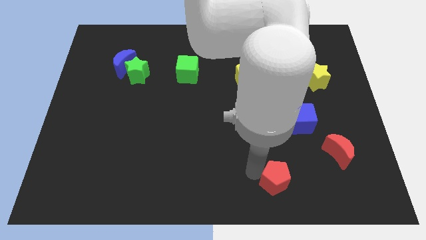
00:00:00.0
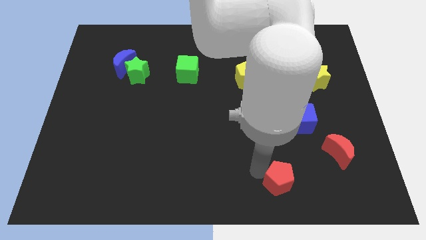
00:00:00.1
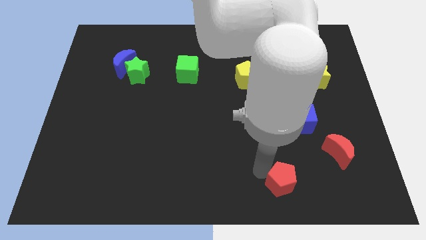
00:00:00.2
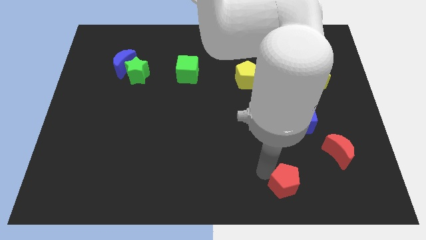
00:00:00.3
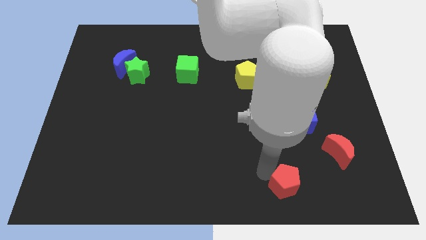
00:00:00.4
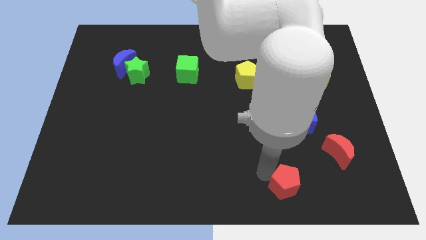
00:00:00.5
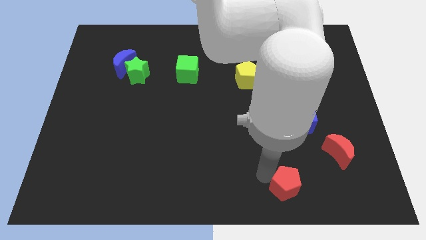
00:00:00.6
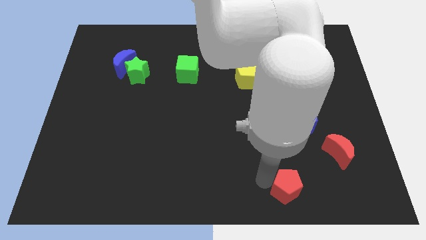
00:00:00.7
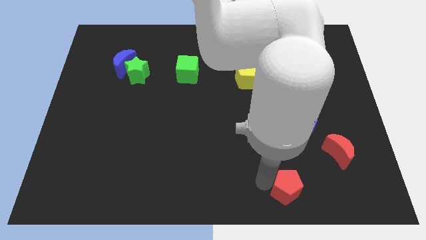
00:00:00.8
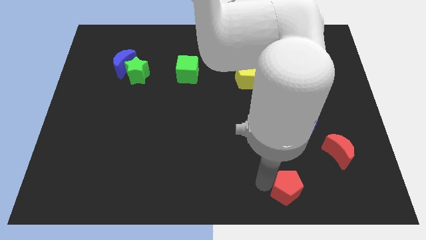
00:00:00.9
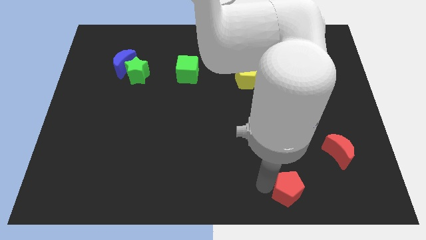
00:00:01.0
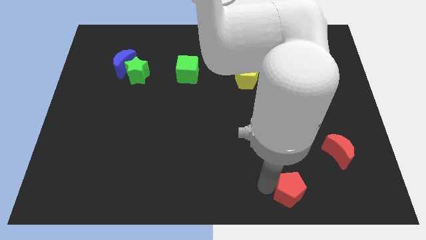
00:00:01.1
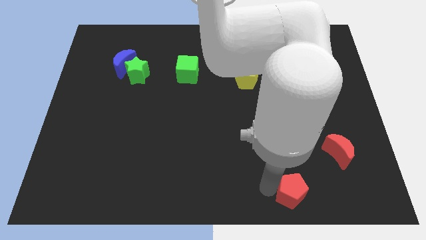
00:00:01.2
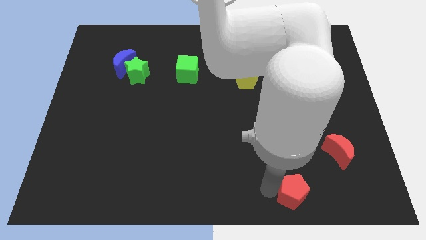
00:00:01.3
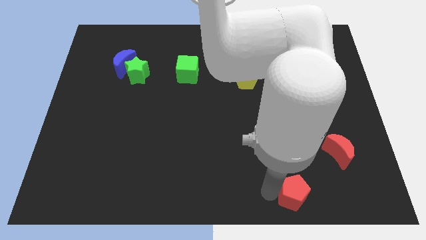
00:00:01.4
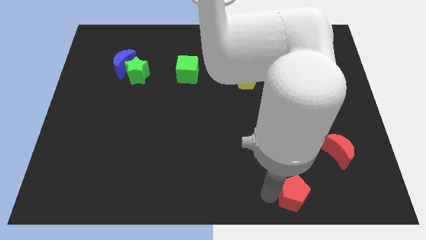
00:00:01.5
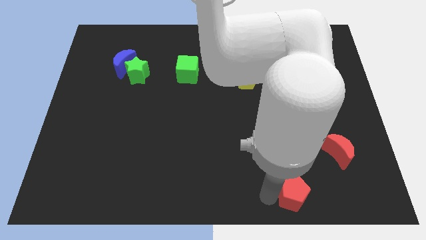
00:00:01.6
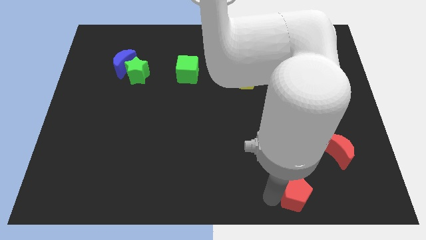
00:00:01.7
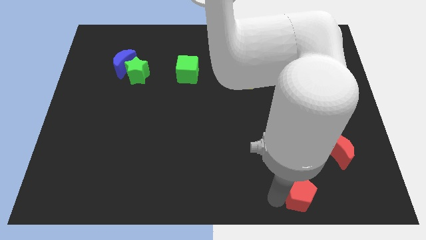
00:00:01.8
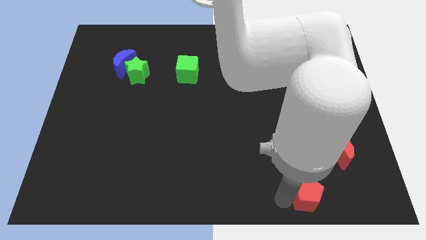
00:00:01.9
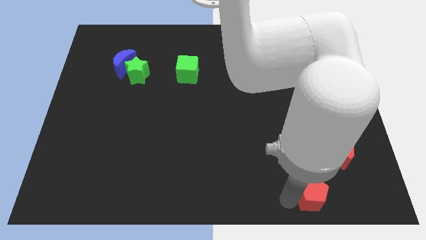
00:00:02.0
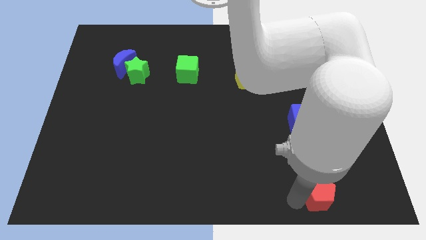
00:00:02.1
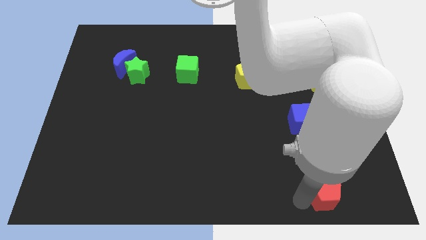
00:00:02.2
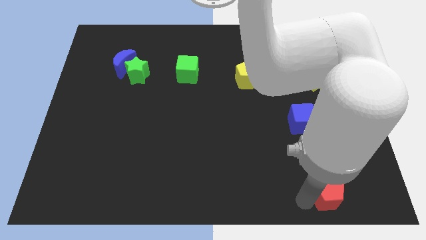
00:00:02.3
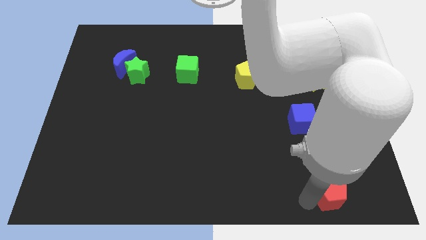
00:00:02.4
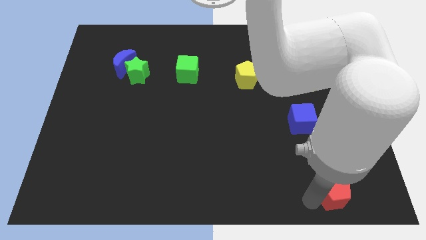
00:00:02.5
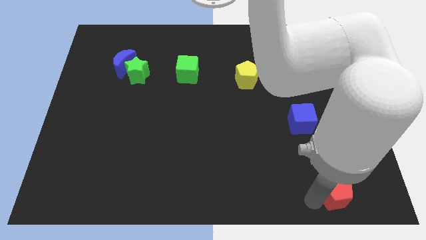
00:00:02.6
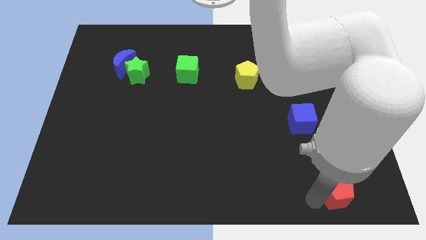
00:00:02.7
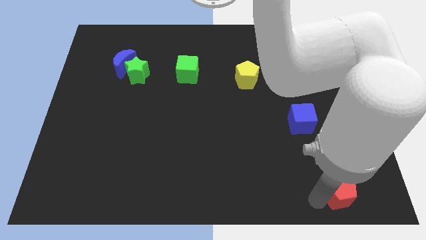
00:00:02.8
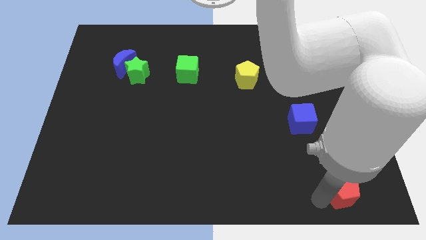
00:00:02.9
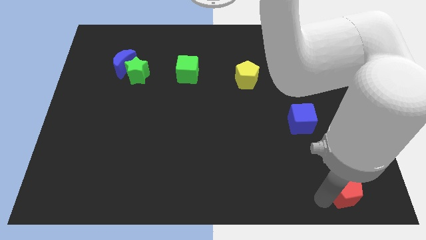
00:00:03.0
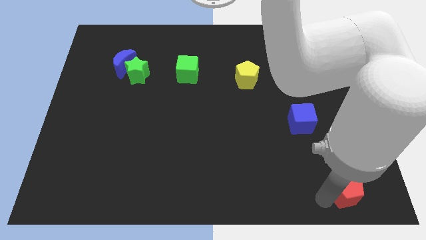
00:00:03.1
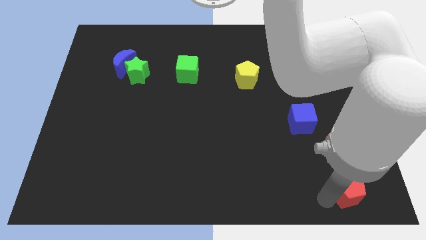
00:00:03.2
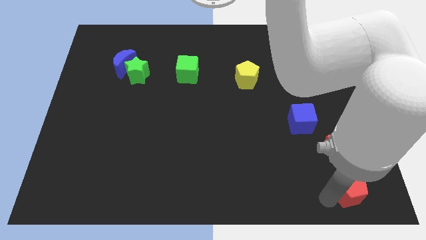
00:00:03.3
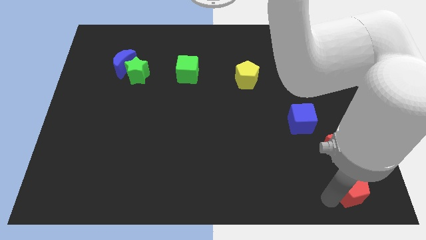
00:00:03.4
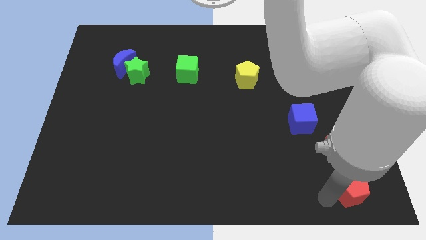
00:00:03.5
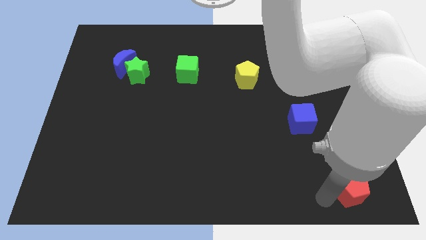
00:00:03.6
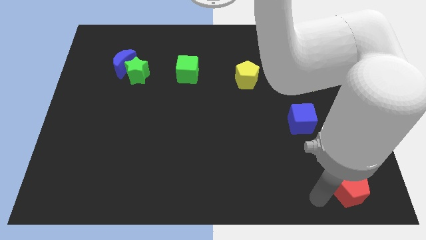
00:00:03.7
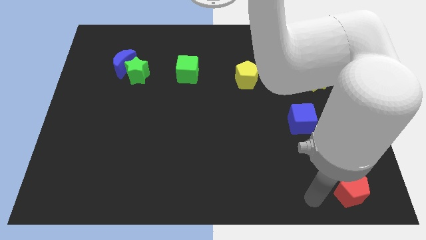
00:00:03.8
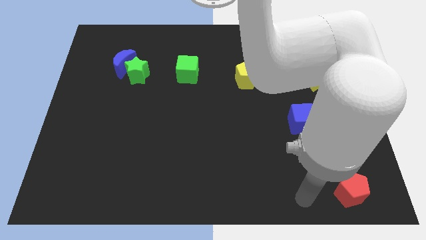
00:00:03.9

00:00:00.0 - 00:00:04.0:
slide the red pentagon diagonally bottom right to the blue cube

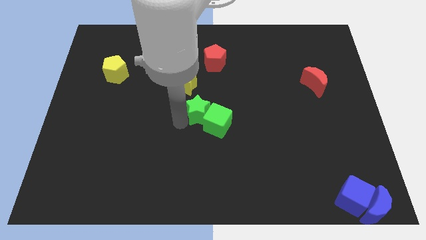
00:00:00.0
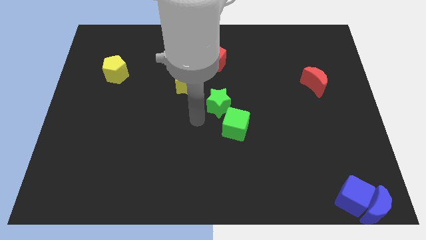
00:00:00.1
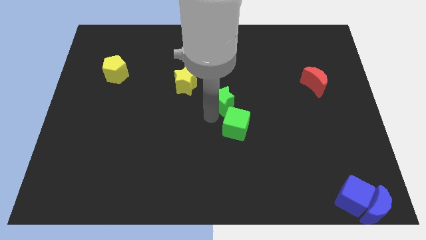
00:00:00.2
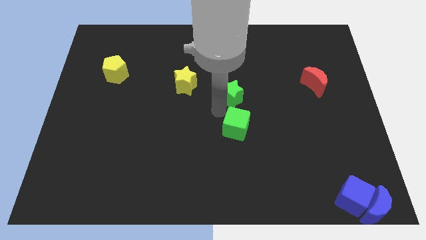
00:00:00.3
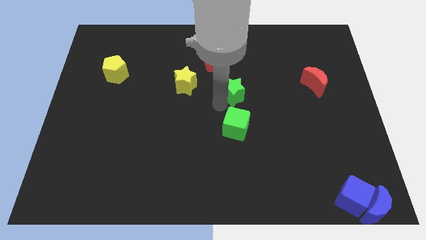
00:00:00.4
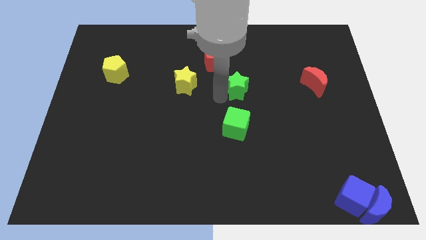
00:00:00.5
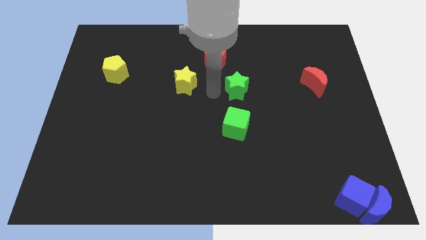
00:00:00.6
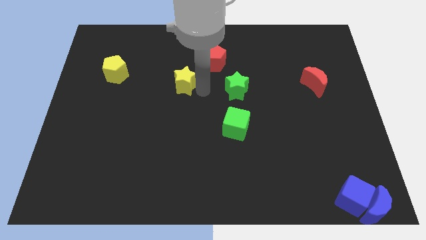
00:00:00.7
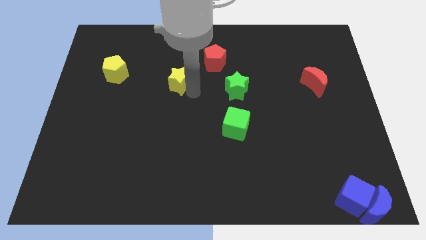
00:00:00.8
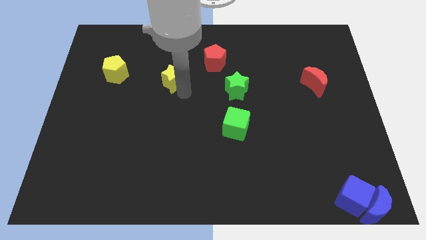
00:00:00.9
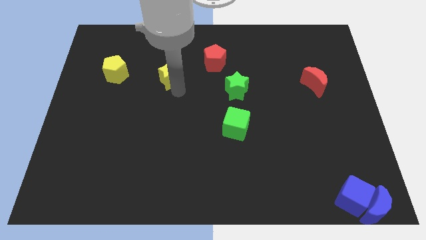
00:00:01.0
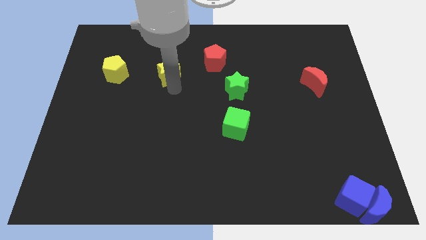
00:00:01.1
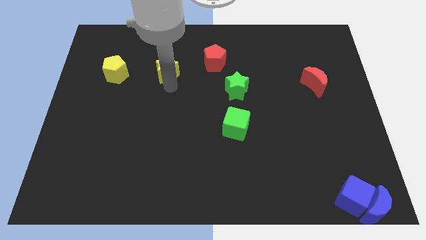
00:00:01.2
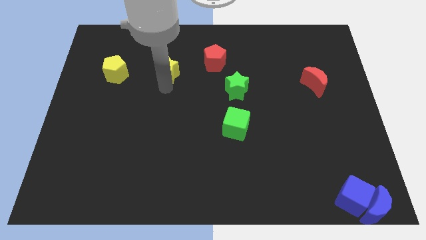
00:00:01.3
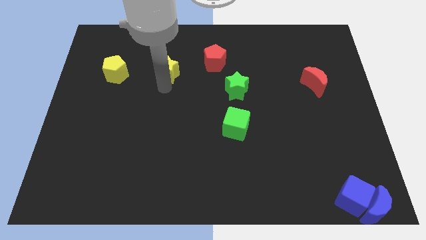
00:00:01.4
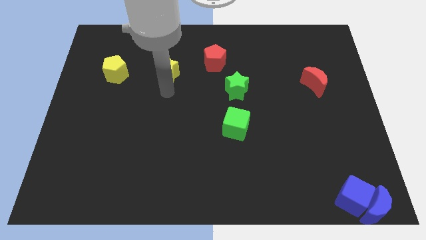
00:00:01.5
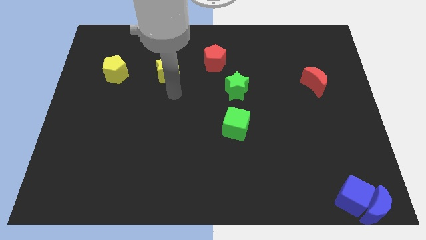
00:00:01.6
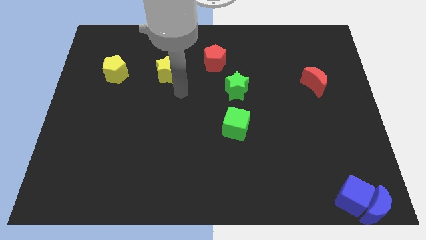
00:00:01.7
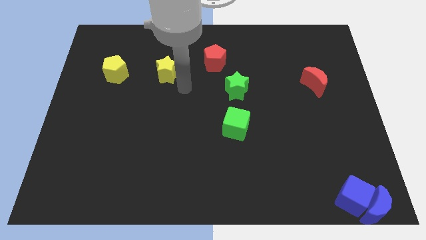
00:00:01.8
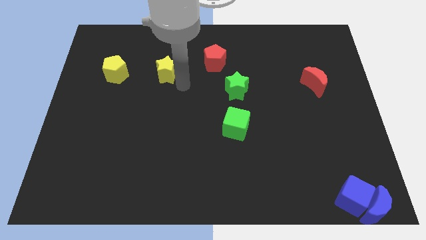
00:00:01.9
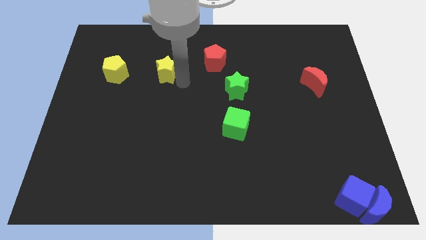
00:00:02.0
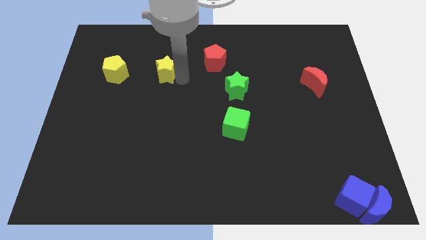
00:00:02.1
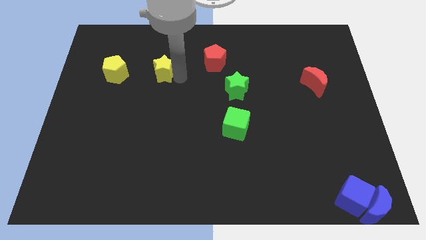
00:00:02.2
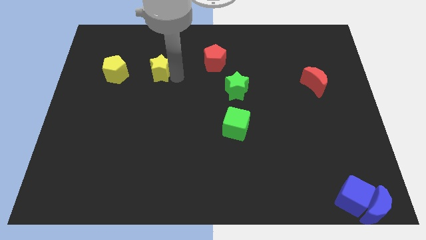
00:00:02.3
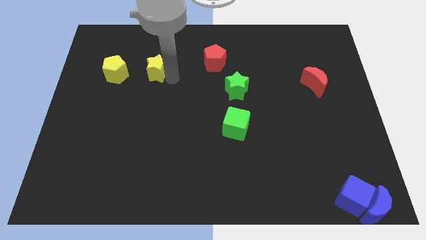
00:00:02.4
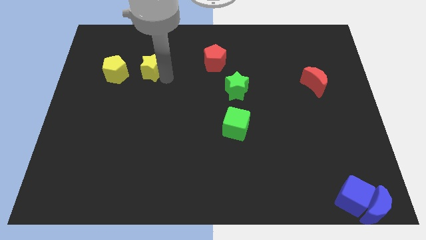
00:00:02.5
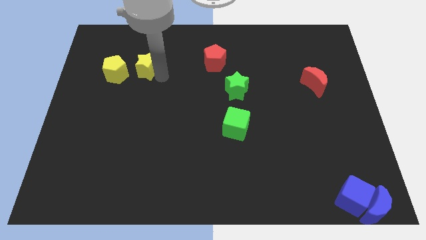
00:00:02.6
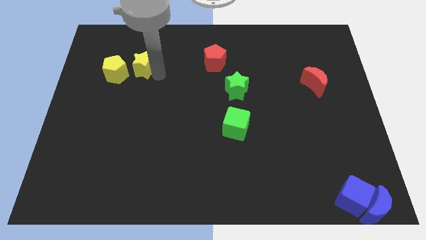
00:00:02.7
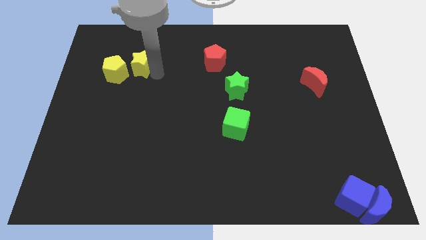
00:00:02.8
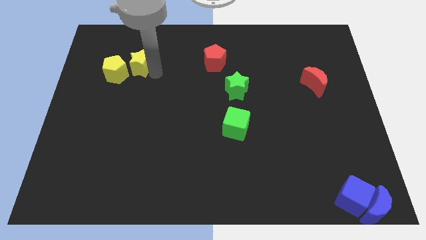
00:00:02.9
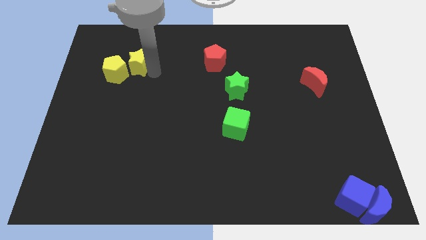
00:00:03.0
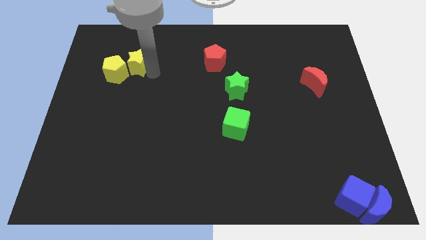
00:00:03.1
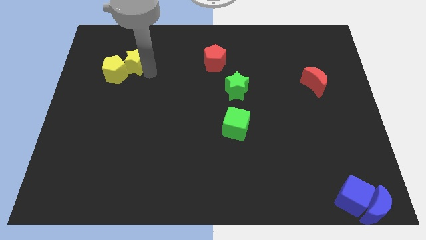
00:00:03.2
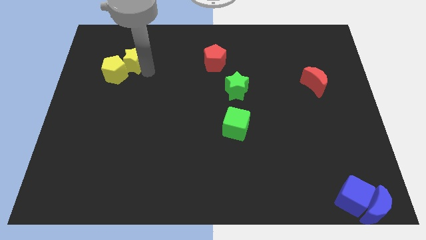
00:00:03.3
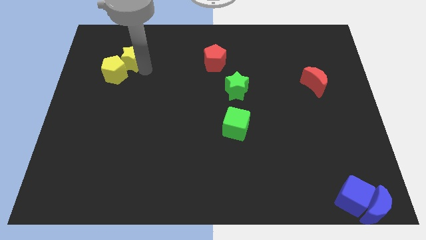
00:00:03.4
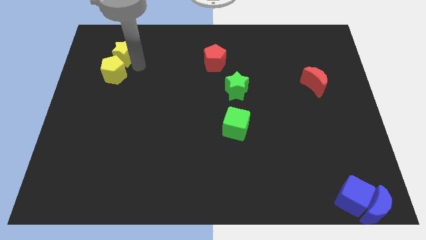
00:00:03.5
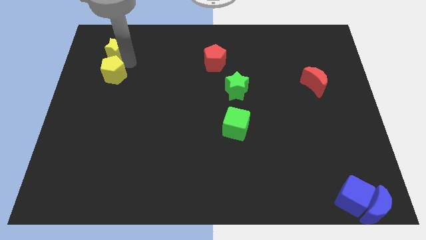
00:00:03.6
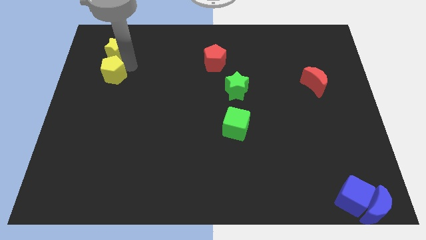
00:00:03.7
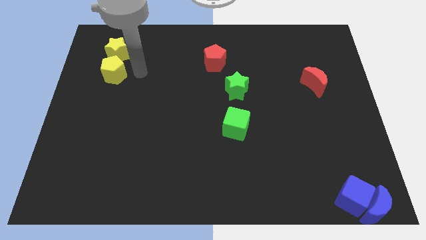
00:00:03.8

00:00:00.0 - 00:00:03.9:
move the yellow star to the top of the yellow pentagon

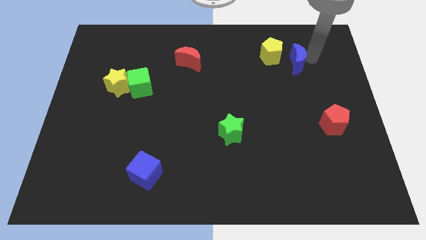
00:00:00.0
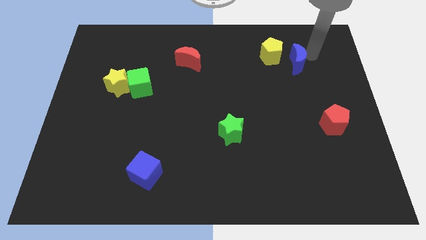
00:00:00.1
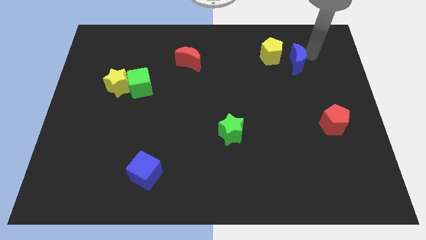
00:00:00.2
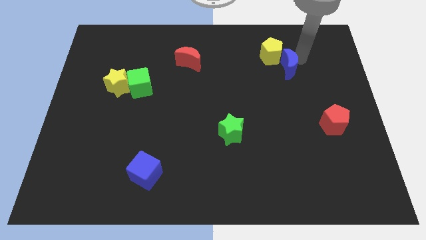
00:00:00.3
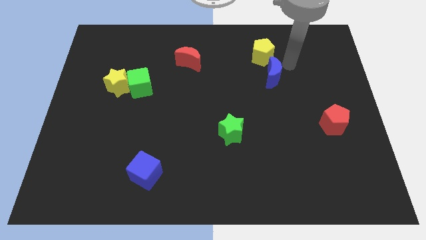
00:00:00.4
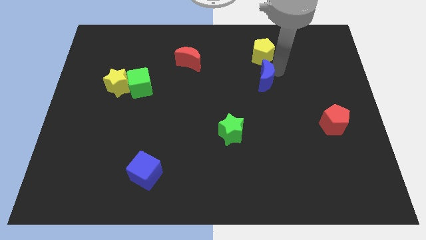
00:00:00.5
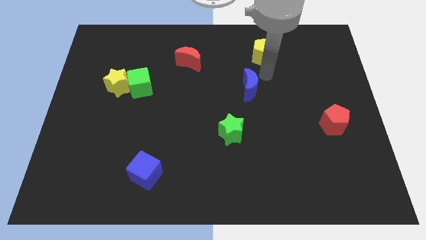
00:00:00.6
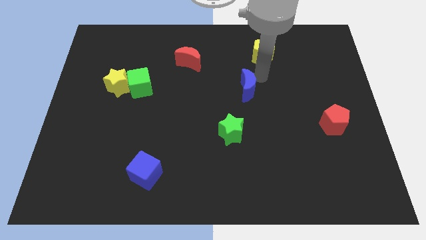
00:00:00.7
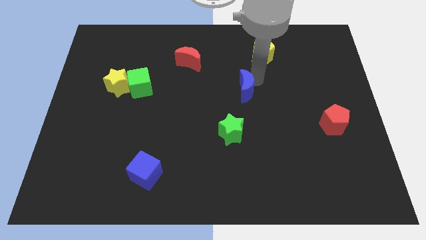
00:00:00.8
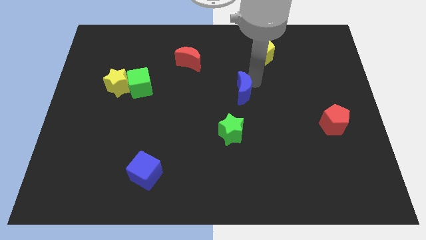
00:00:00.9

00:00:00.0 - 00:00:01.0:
move blue moon diagonally above the green star
